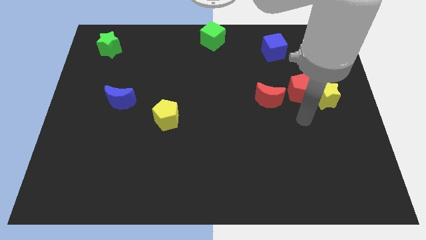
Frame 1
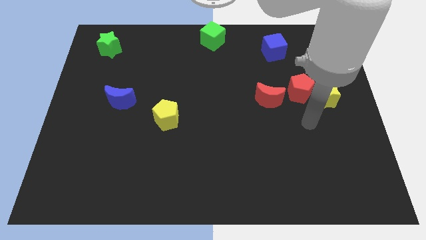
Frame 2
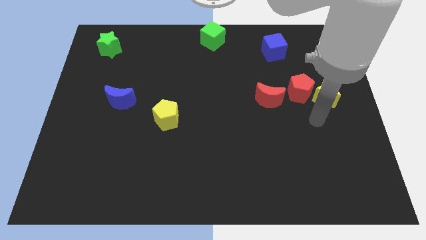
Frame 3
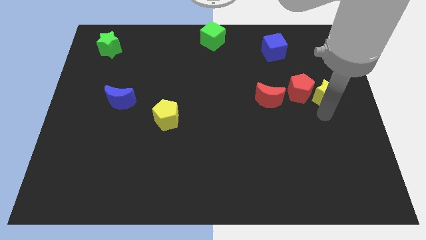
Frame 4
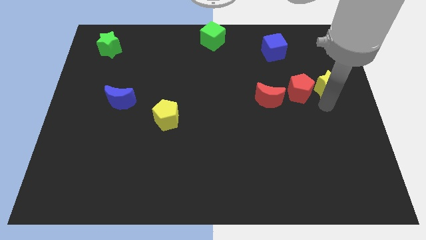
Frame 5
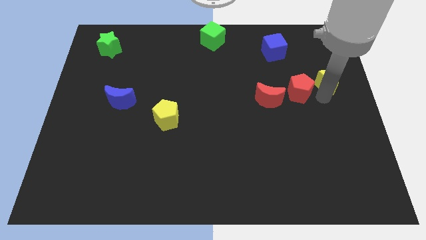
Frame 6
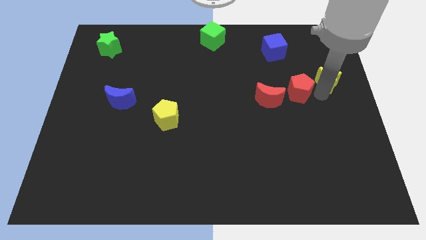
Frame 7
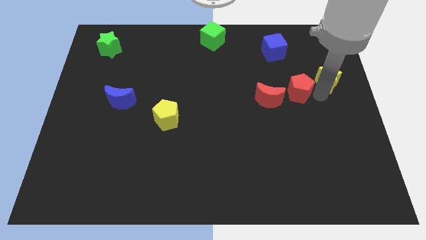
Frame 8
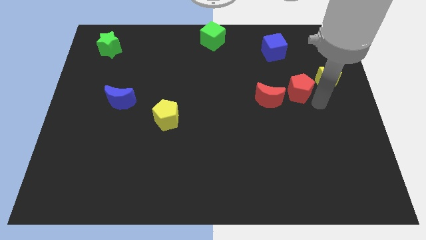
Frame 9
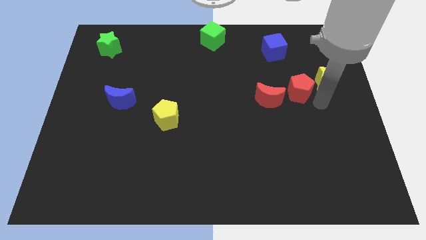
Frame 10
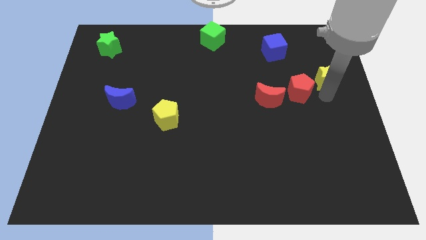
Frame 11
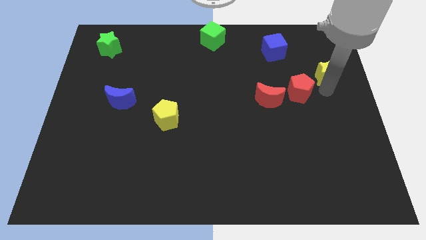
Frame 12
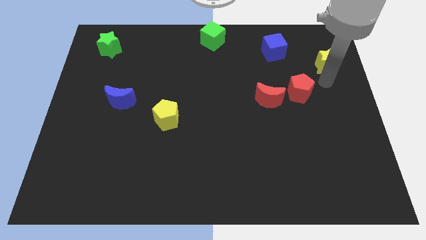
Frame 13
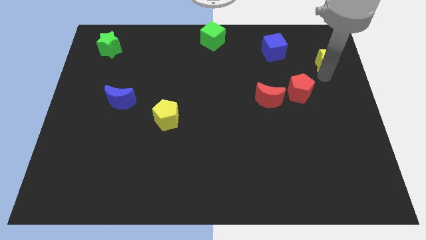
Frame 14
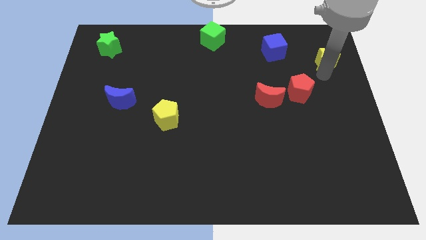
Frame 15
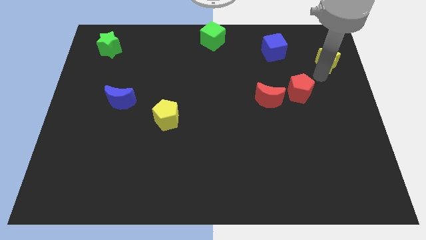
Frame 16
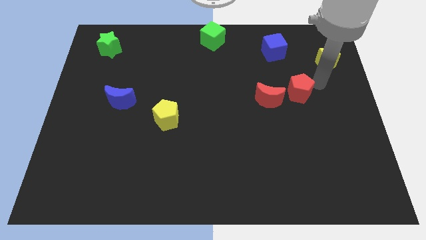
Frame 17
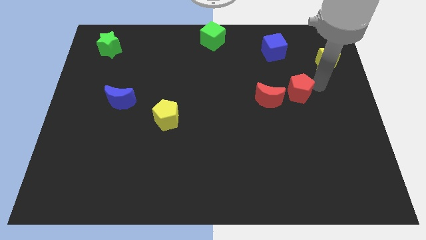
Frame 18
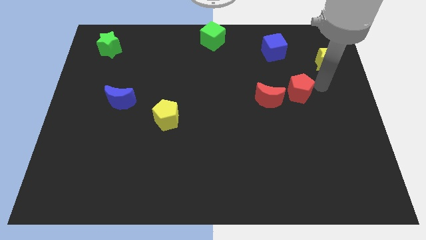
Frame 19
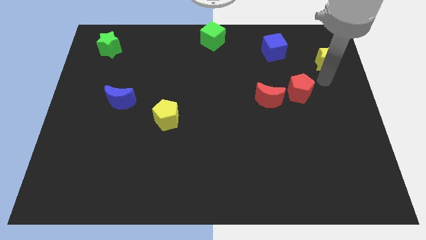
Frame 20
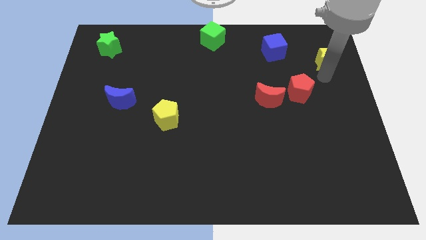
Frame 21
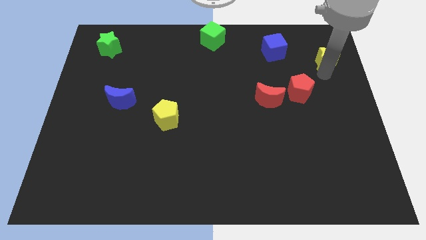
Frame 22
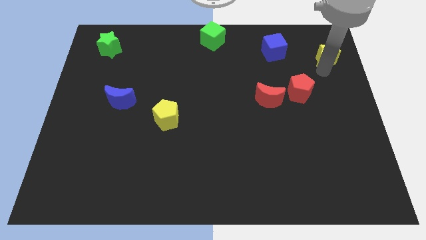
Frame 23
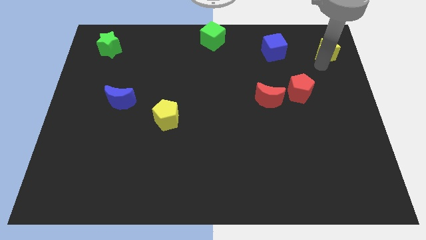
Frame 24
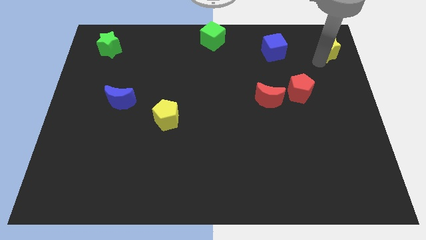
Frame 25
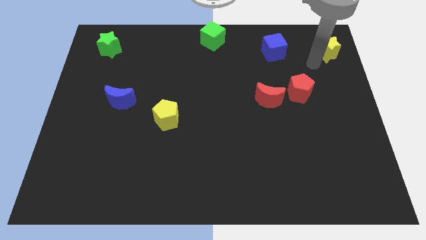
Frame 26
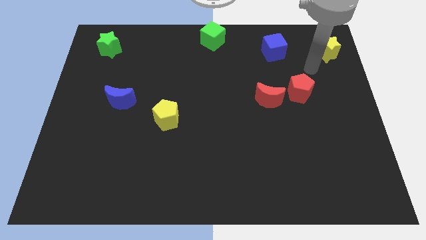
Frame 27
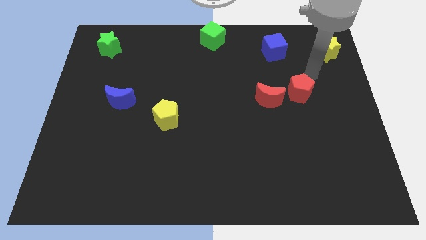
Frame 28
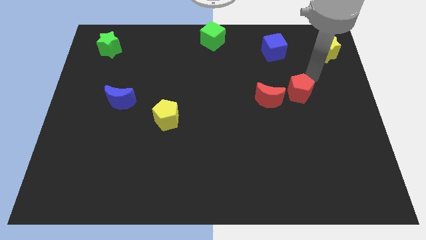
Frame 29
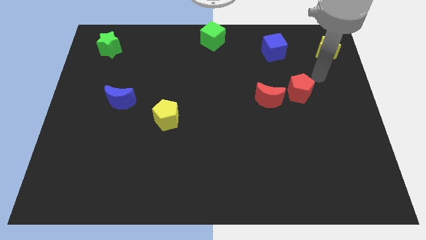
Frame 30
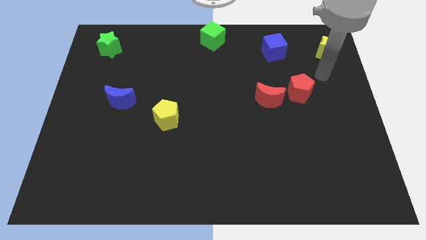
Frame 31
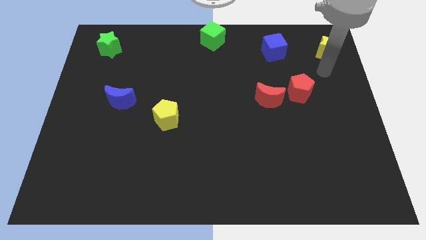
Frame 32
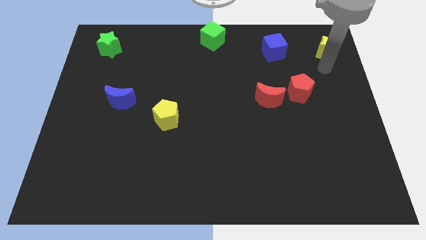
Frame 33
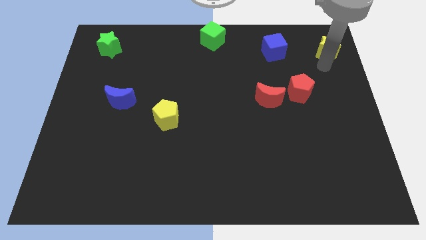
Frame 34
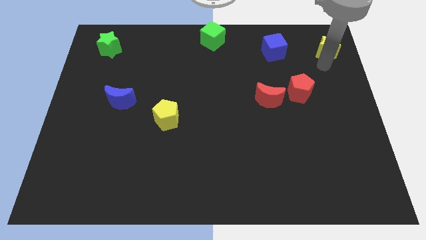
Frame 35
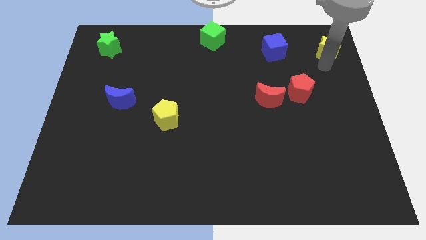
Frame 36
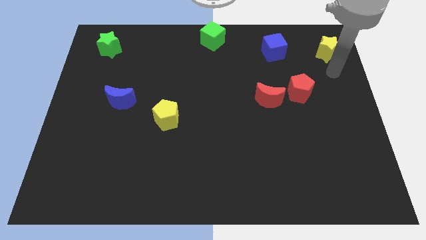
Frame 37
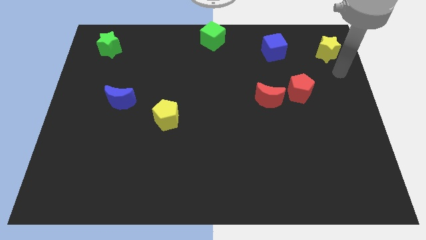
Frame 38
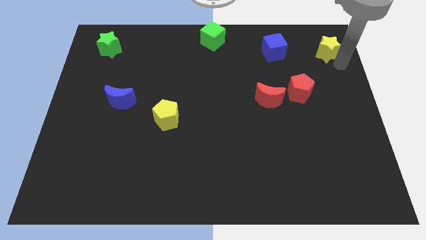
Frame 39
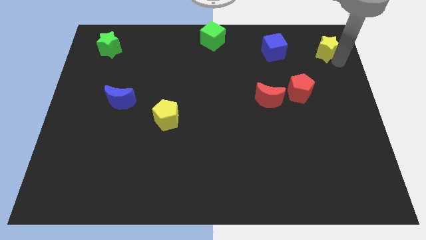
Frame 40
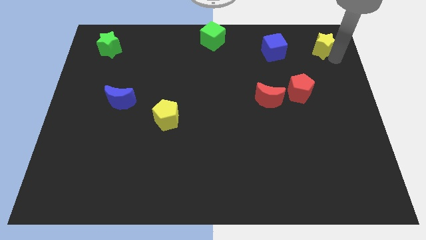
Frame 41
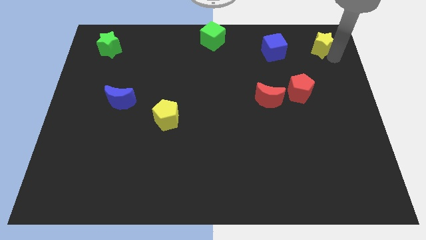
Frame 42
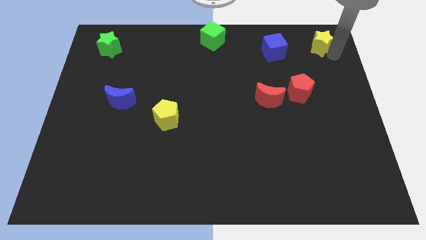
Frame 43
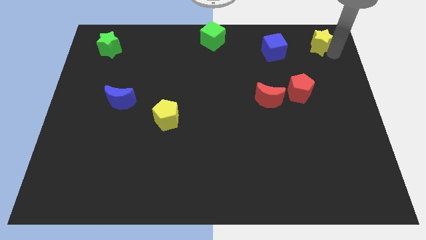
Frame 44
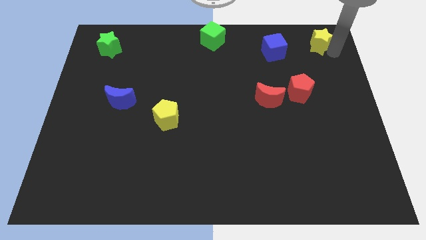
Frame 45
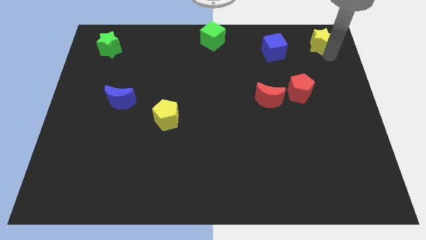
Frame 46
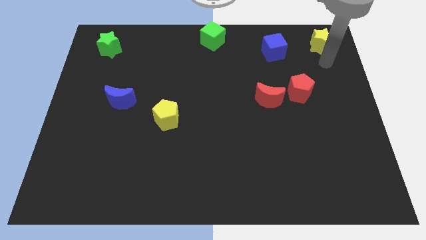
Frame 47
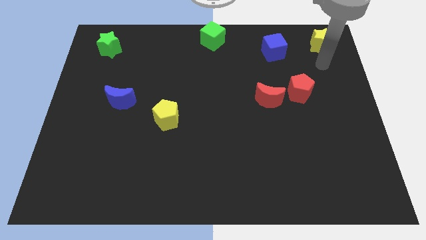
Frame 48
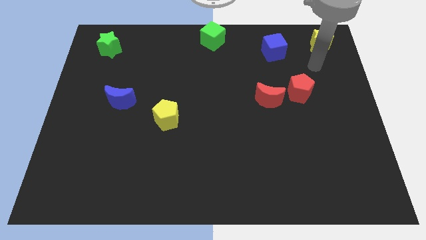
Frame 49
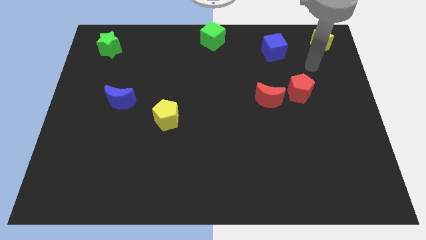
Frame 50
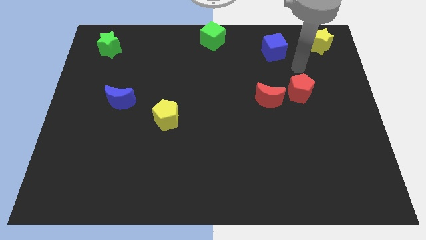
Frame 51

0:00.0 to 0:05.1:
slide yellow star towards the top right

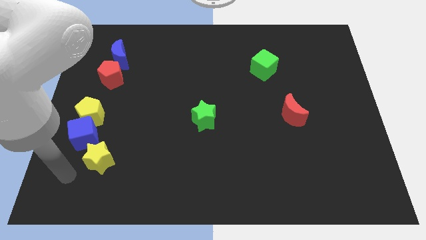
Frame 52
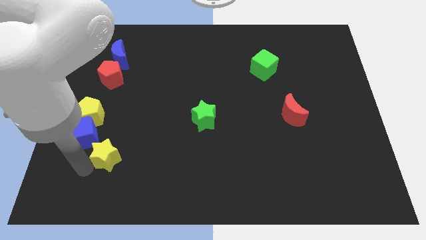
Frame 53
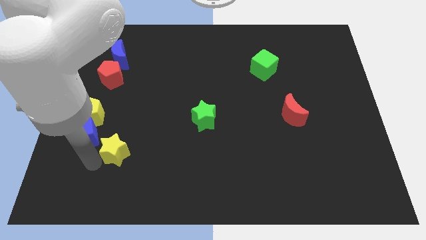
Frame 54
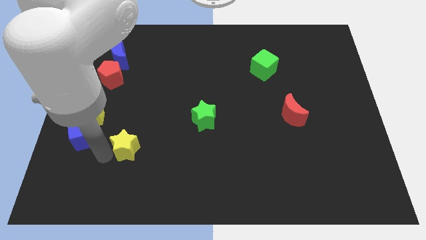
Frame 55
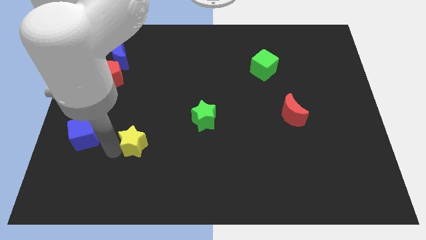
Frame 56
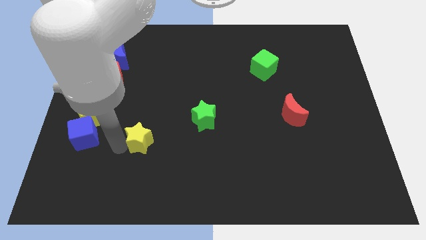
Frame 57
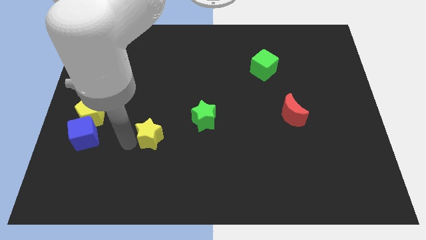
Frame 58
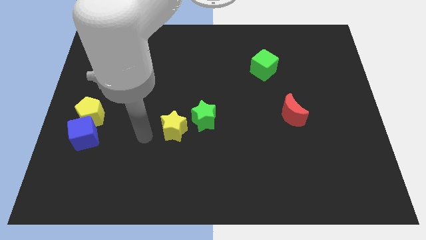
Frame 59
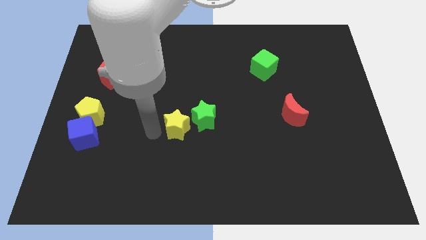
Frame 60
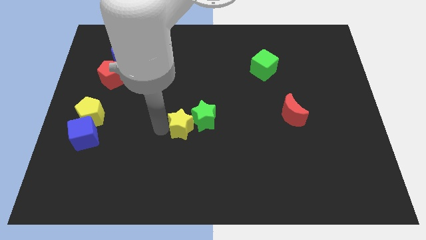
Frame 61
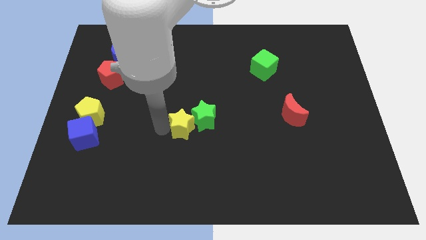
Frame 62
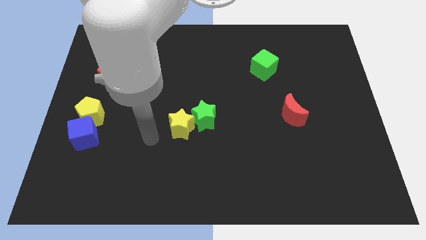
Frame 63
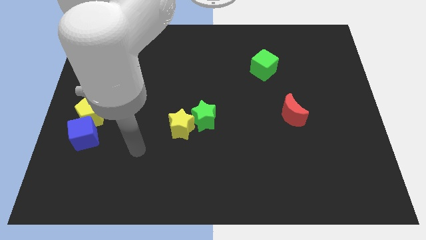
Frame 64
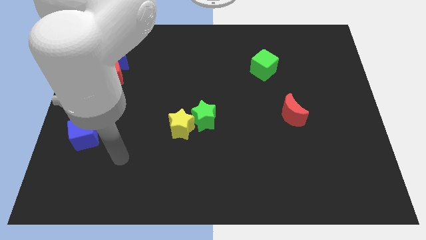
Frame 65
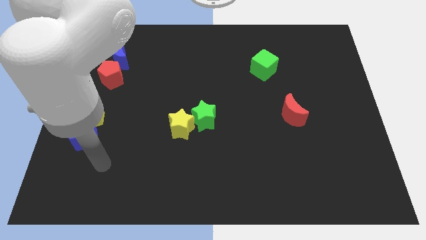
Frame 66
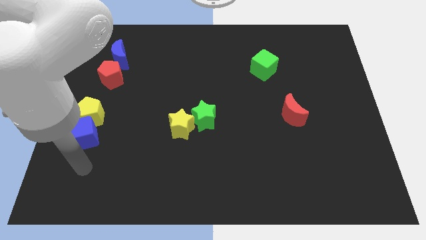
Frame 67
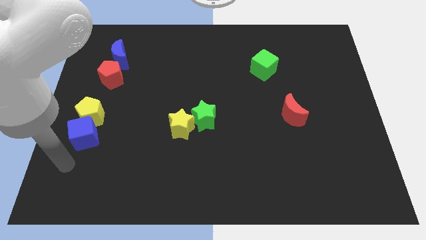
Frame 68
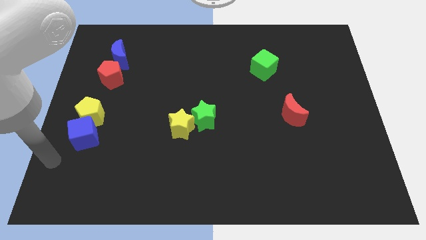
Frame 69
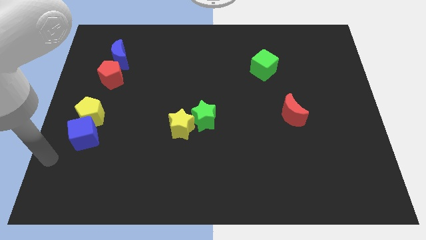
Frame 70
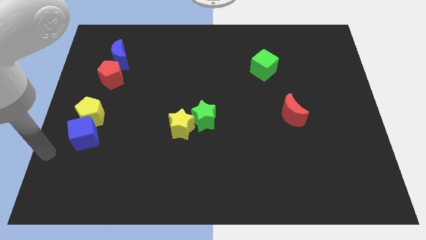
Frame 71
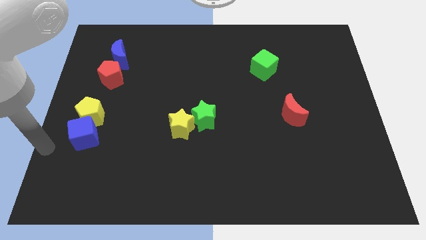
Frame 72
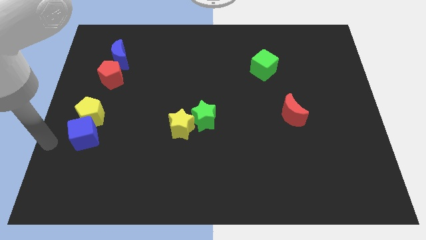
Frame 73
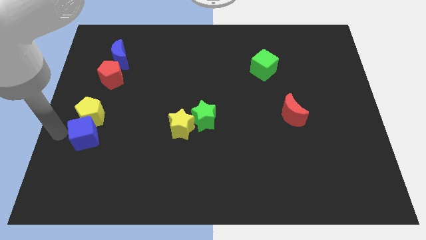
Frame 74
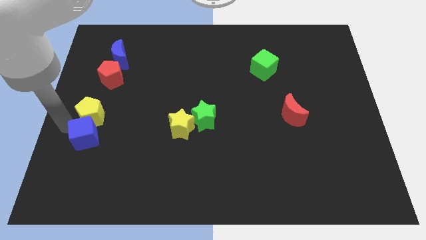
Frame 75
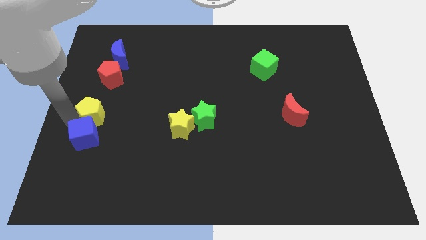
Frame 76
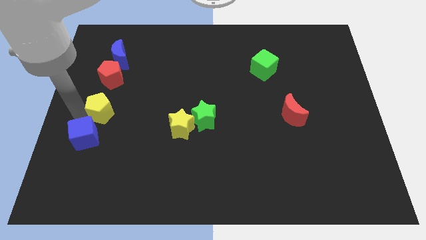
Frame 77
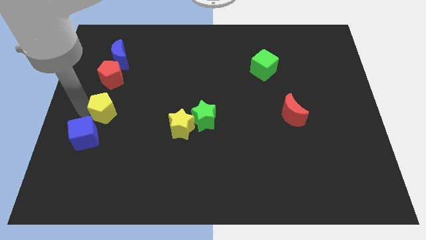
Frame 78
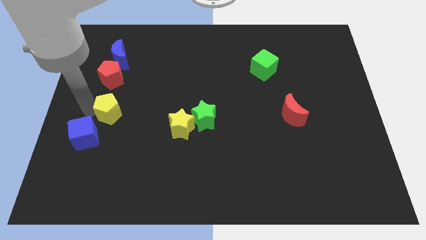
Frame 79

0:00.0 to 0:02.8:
place yellow pentagon below red pentagon

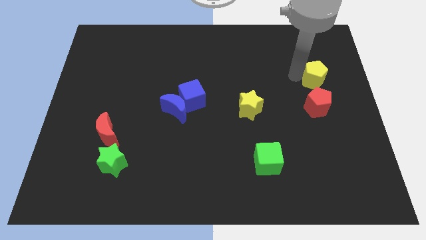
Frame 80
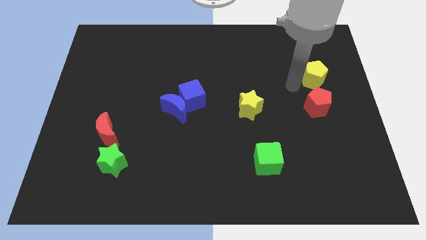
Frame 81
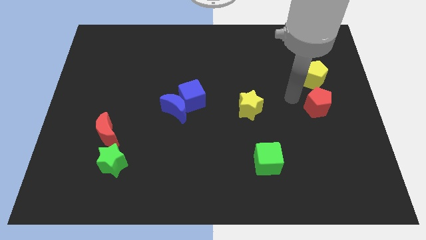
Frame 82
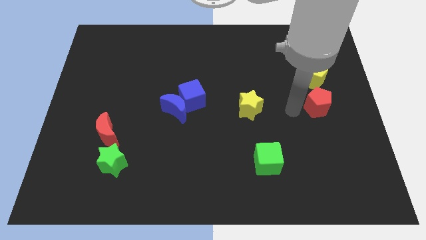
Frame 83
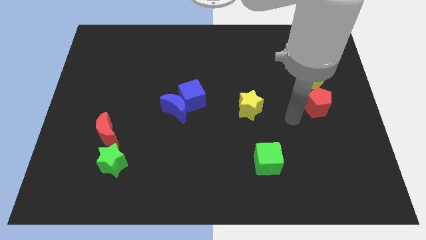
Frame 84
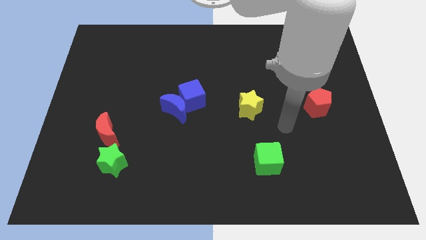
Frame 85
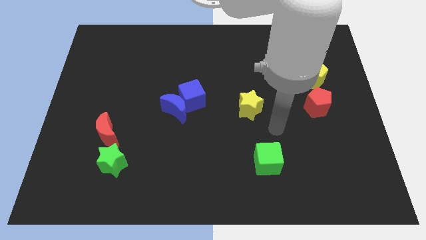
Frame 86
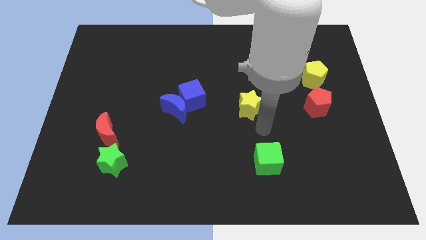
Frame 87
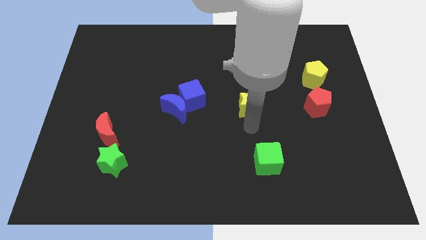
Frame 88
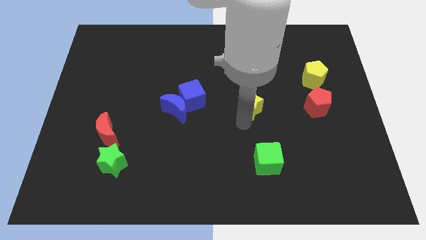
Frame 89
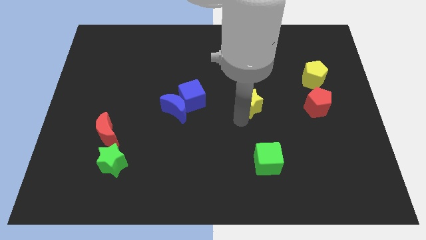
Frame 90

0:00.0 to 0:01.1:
move your arm to yellow star
